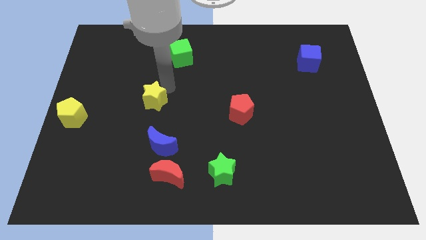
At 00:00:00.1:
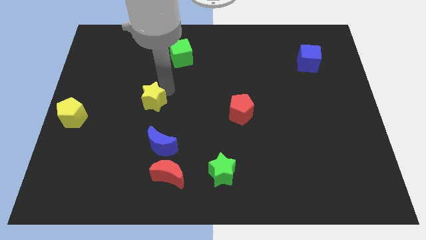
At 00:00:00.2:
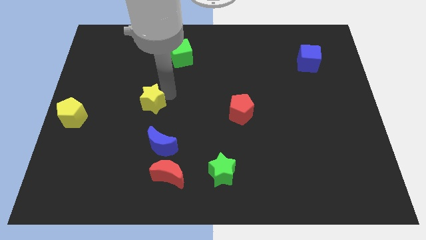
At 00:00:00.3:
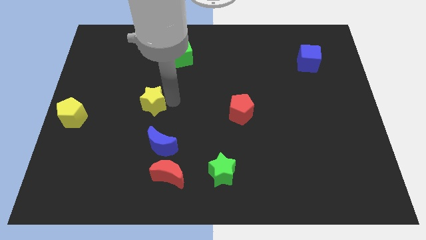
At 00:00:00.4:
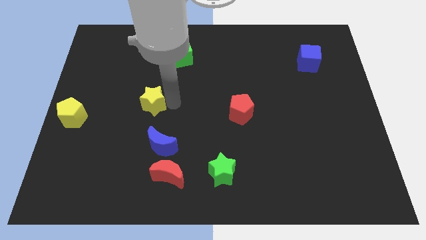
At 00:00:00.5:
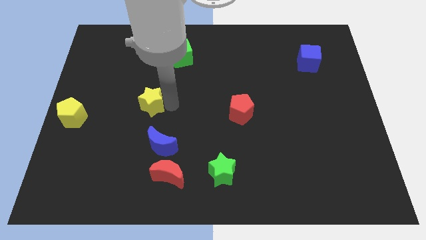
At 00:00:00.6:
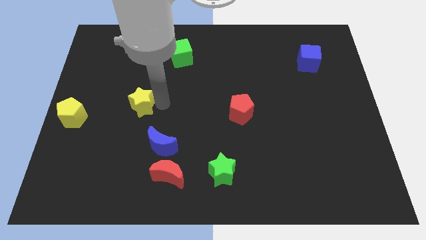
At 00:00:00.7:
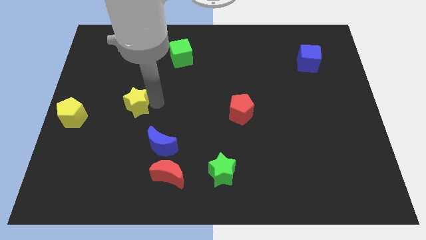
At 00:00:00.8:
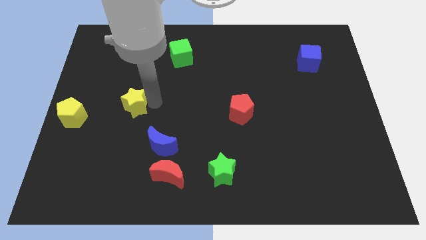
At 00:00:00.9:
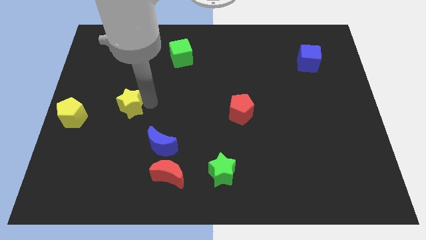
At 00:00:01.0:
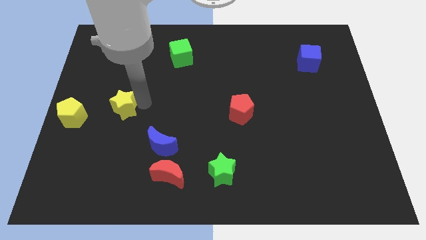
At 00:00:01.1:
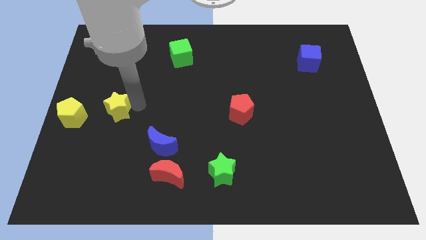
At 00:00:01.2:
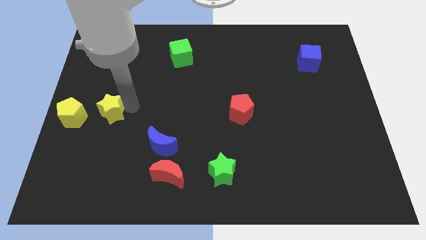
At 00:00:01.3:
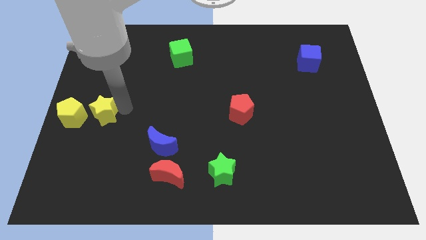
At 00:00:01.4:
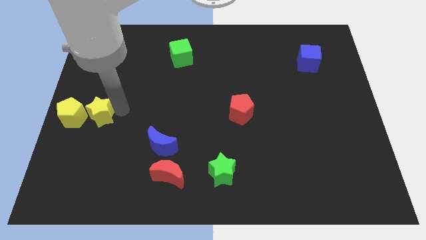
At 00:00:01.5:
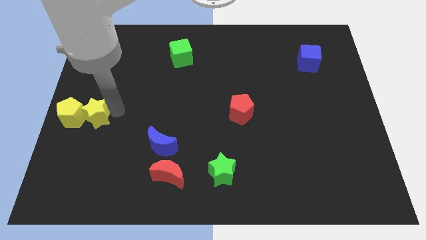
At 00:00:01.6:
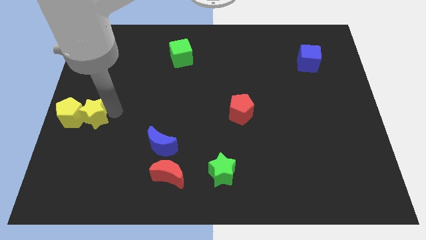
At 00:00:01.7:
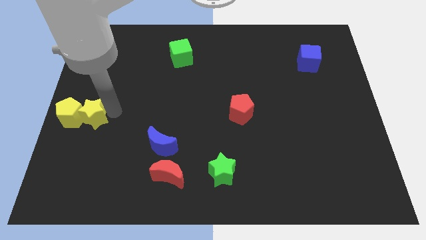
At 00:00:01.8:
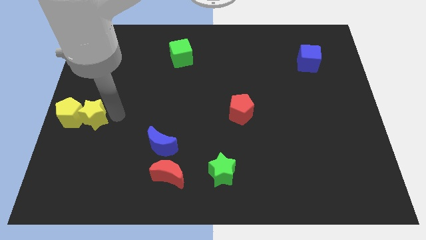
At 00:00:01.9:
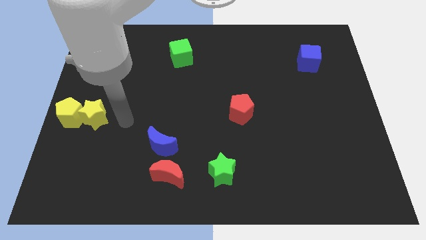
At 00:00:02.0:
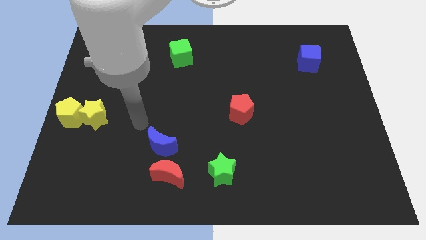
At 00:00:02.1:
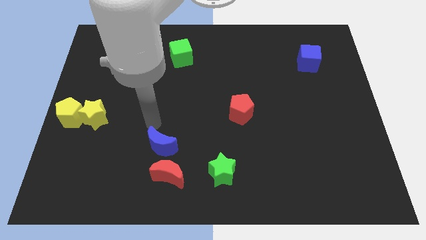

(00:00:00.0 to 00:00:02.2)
push the yellow star into yellow pentagon to the right

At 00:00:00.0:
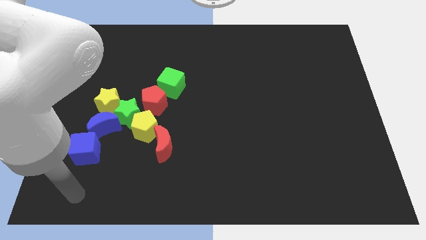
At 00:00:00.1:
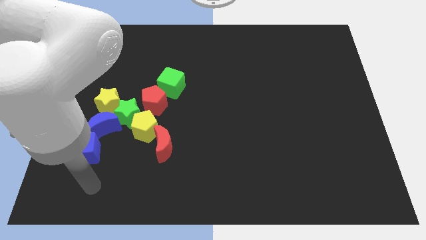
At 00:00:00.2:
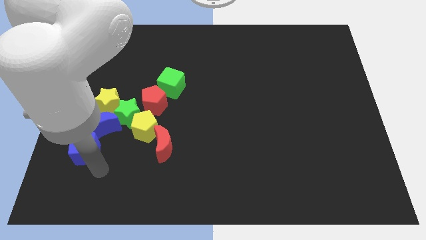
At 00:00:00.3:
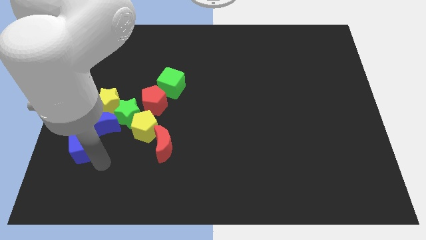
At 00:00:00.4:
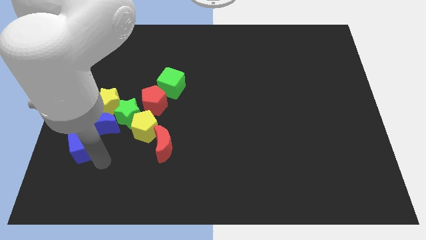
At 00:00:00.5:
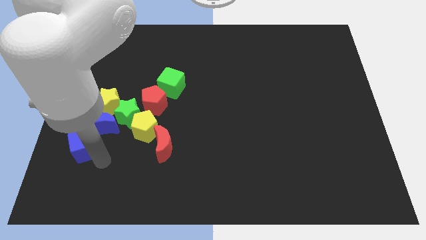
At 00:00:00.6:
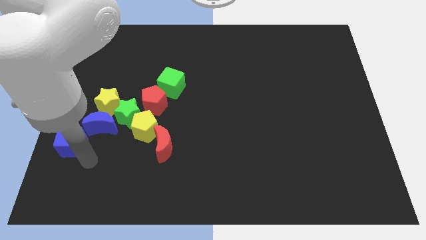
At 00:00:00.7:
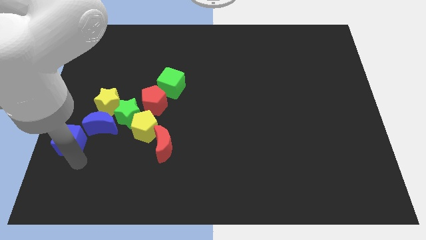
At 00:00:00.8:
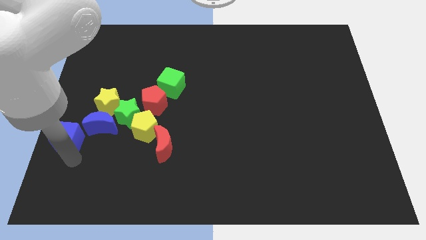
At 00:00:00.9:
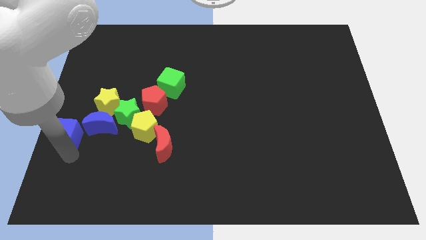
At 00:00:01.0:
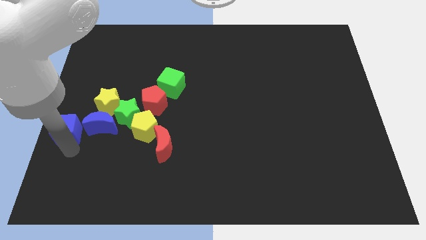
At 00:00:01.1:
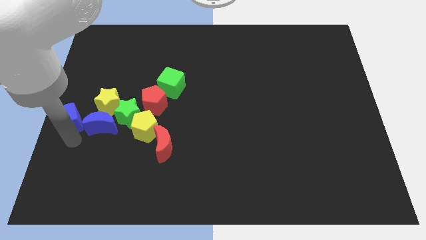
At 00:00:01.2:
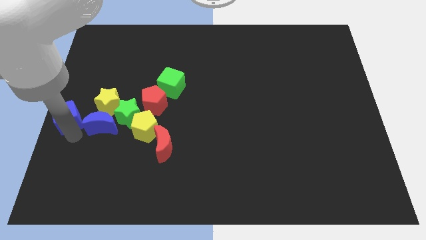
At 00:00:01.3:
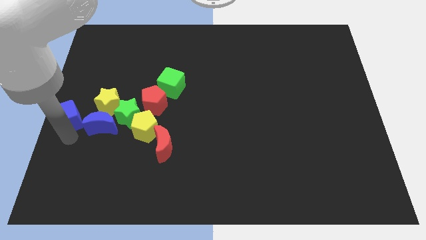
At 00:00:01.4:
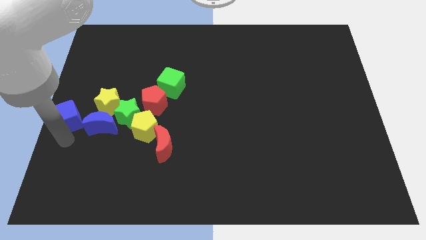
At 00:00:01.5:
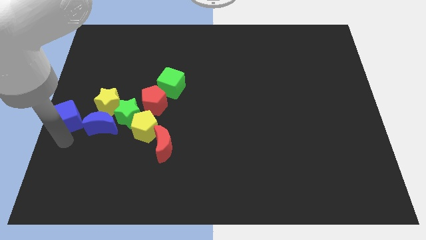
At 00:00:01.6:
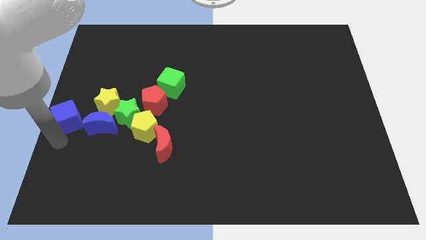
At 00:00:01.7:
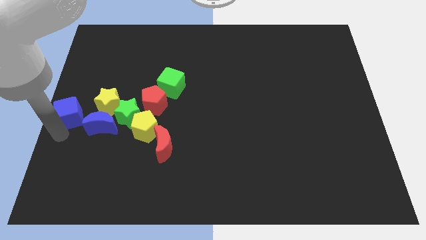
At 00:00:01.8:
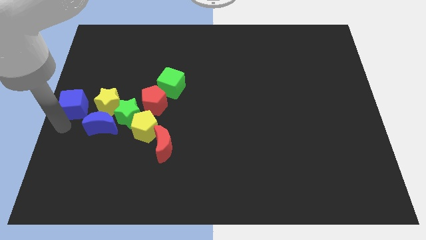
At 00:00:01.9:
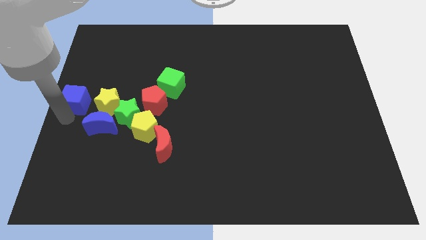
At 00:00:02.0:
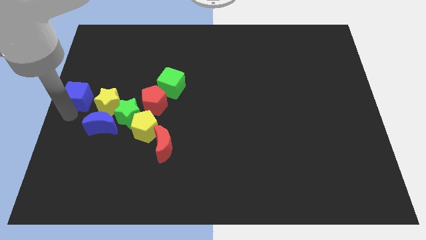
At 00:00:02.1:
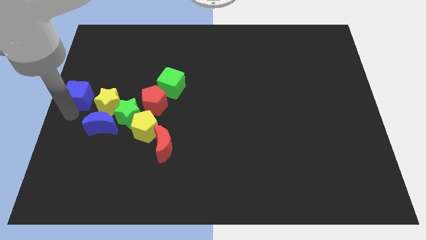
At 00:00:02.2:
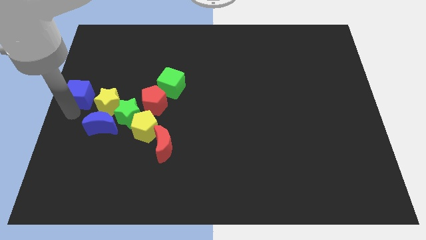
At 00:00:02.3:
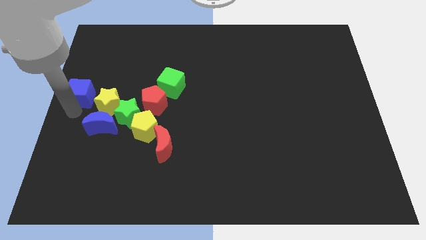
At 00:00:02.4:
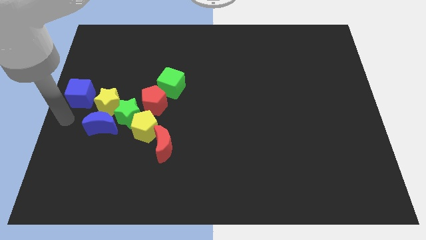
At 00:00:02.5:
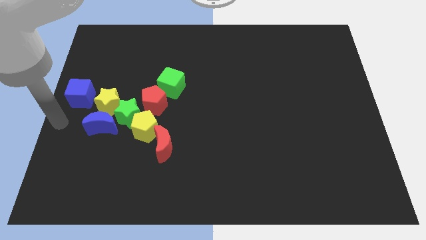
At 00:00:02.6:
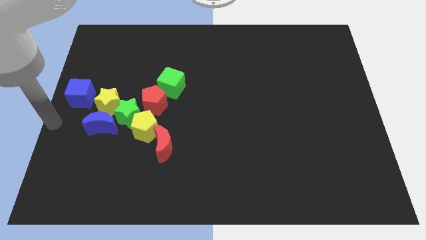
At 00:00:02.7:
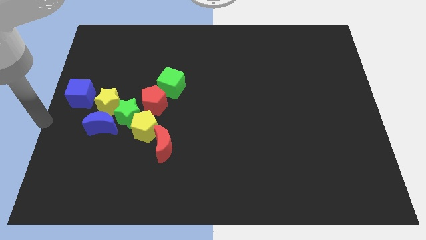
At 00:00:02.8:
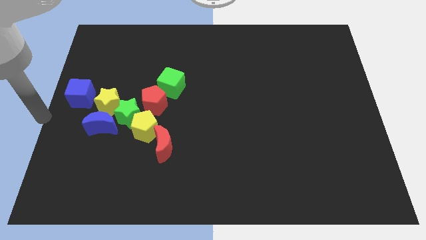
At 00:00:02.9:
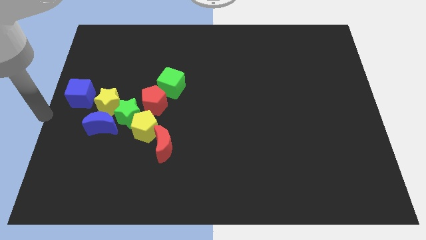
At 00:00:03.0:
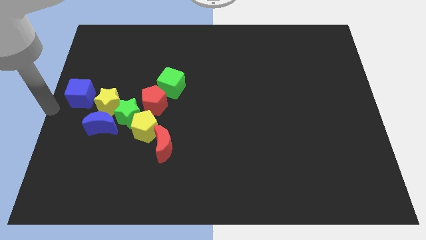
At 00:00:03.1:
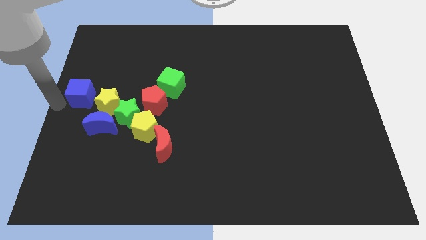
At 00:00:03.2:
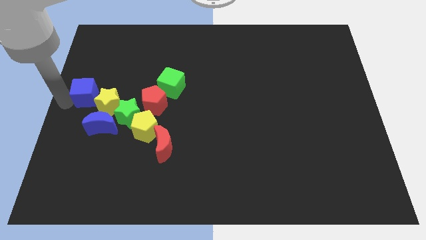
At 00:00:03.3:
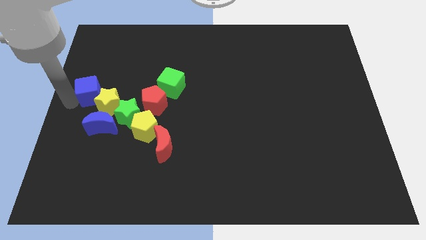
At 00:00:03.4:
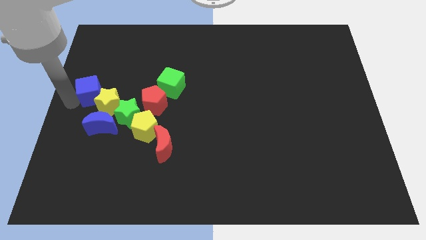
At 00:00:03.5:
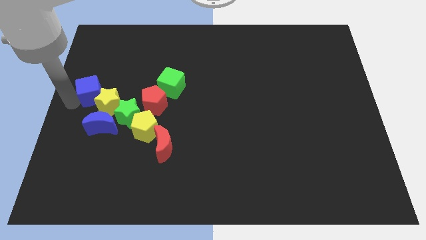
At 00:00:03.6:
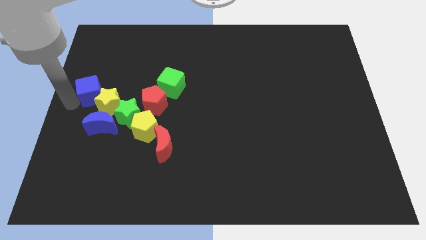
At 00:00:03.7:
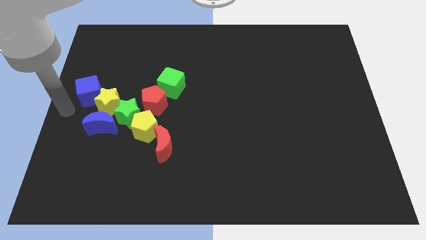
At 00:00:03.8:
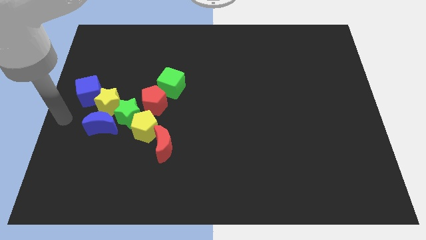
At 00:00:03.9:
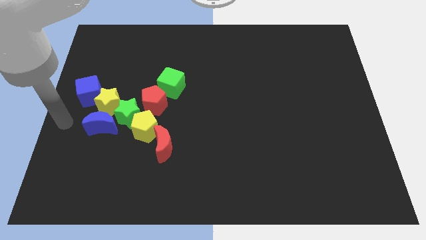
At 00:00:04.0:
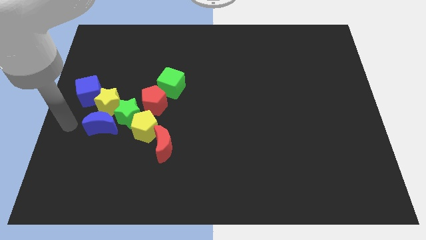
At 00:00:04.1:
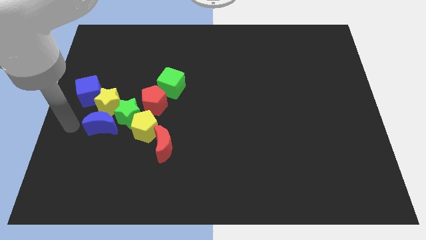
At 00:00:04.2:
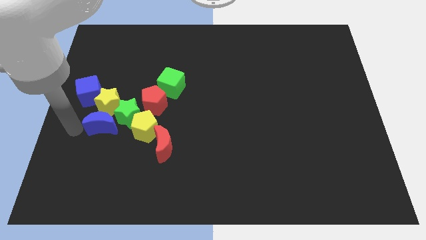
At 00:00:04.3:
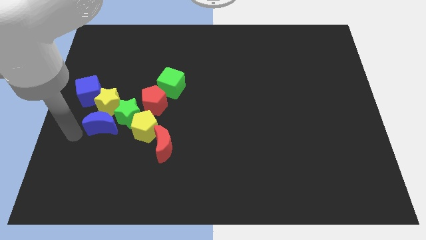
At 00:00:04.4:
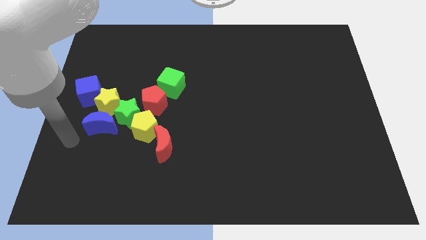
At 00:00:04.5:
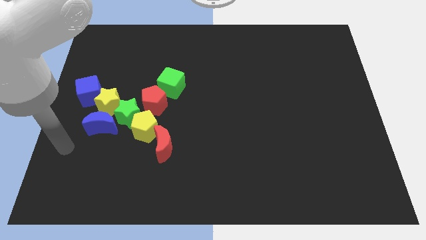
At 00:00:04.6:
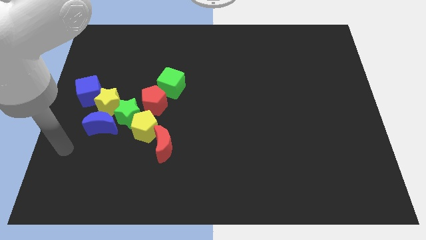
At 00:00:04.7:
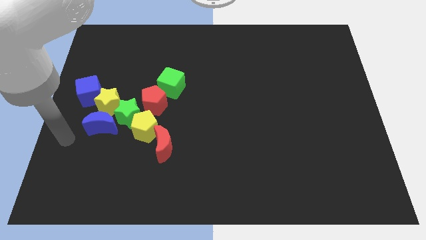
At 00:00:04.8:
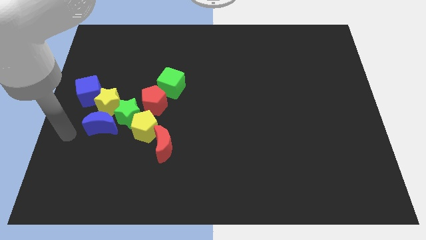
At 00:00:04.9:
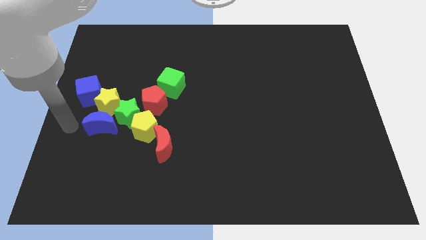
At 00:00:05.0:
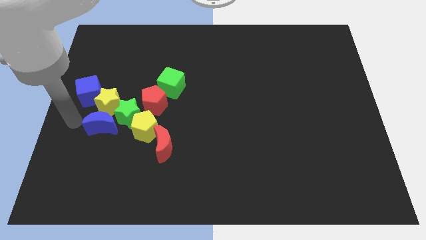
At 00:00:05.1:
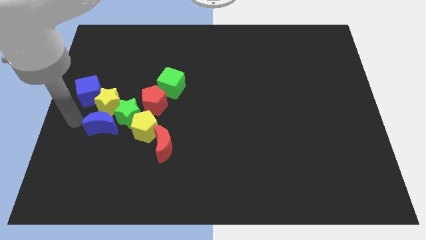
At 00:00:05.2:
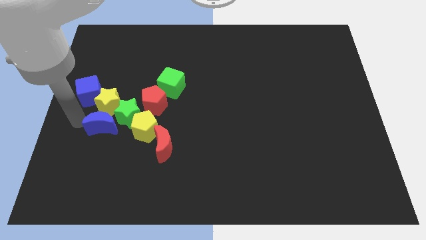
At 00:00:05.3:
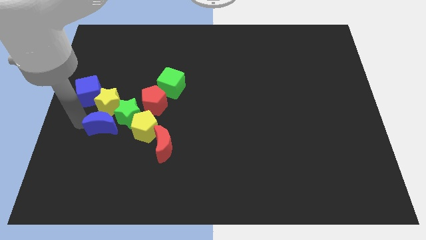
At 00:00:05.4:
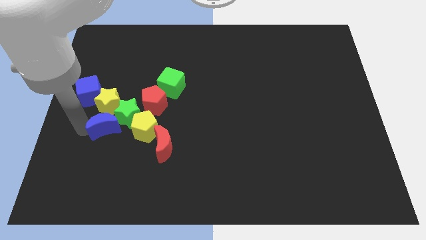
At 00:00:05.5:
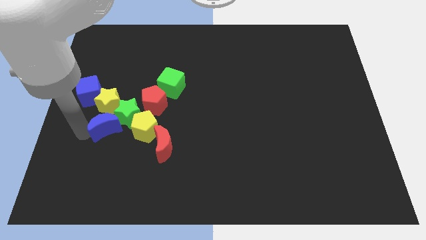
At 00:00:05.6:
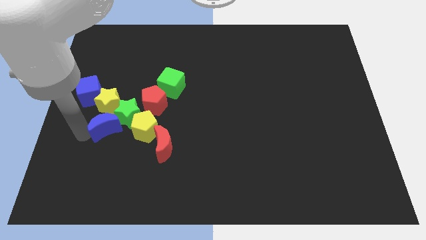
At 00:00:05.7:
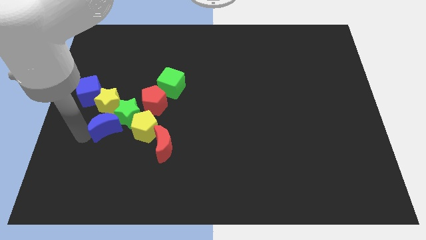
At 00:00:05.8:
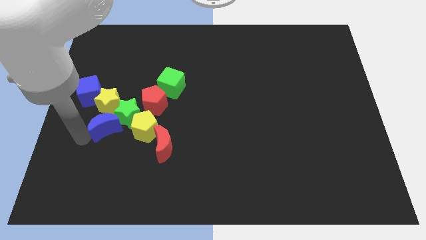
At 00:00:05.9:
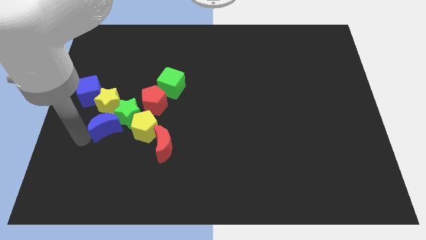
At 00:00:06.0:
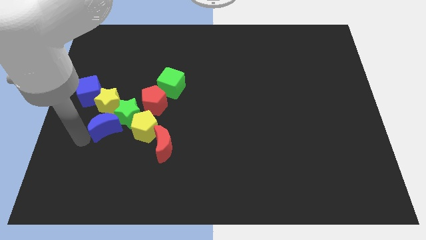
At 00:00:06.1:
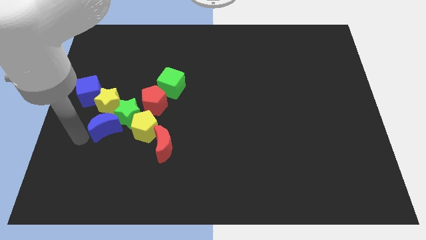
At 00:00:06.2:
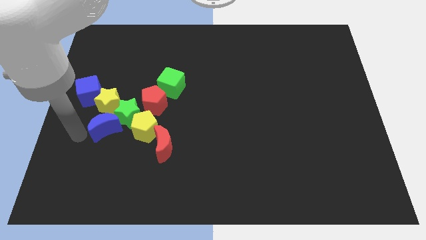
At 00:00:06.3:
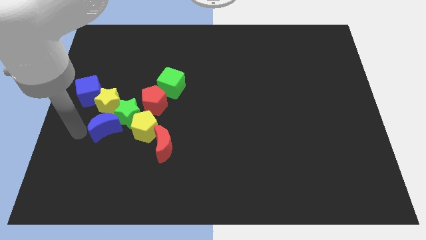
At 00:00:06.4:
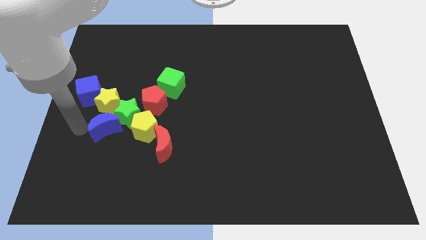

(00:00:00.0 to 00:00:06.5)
separate the blue cube and the blue crescent

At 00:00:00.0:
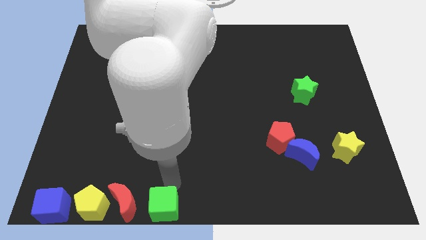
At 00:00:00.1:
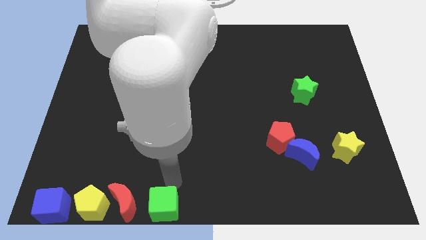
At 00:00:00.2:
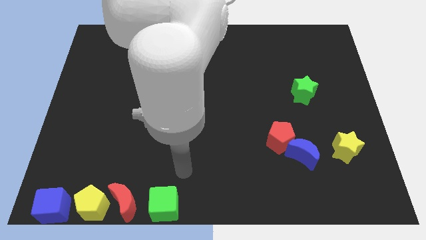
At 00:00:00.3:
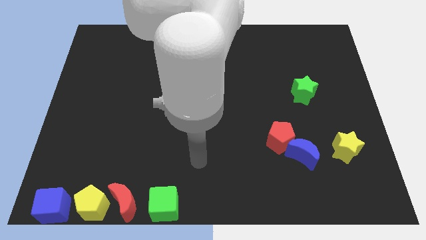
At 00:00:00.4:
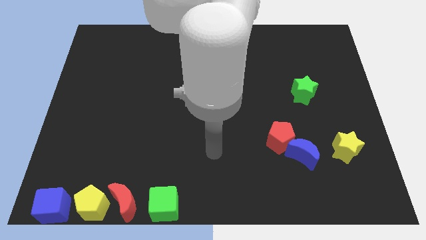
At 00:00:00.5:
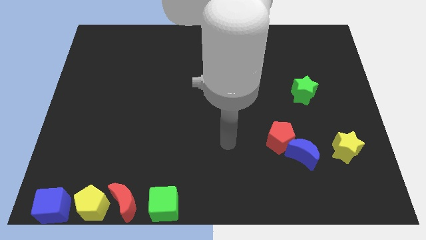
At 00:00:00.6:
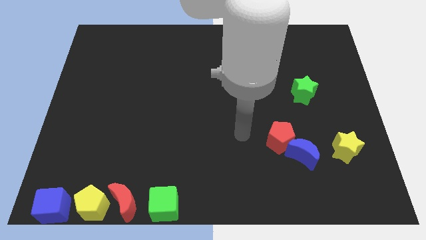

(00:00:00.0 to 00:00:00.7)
move the arm away from the green cube
